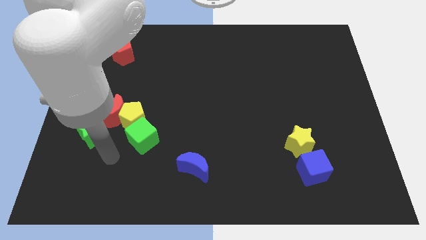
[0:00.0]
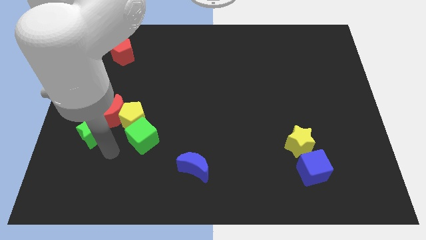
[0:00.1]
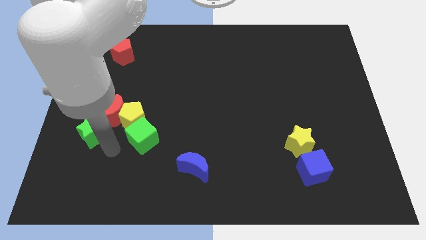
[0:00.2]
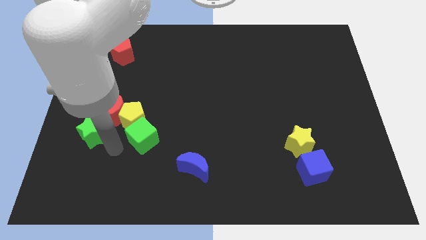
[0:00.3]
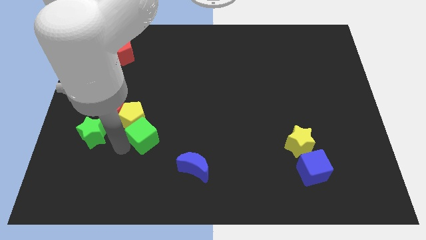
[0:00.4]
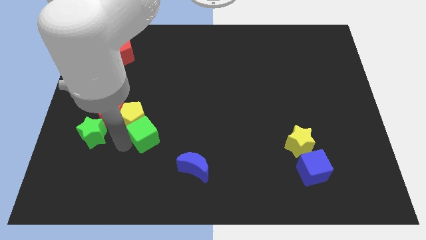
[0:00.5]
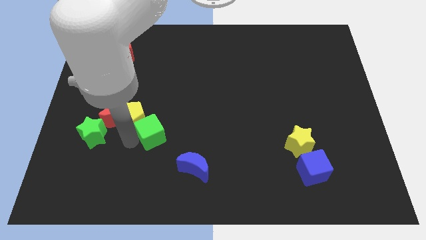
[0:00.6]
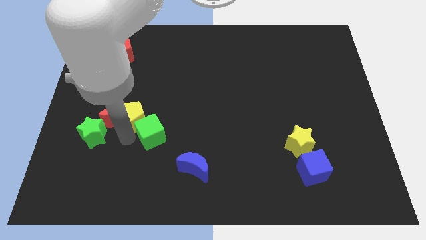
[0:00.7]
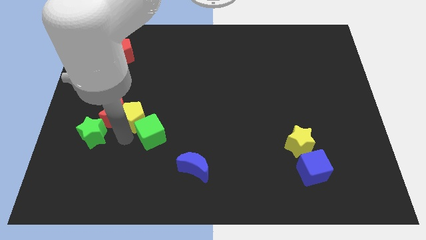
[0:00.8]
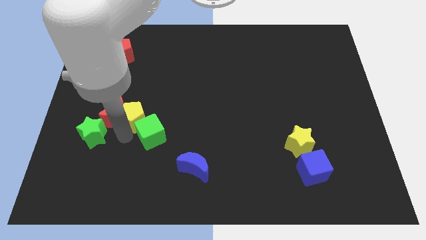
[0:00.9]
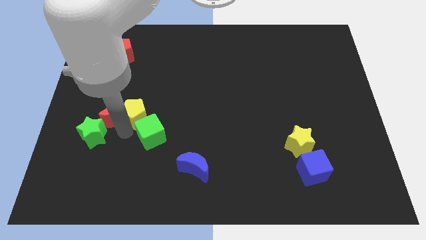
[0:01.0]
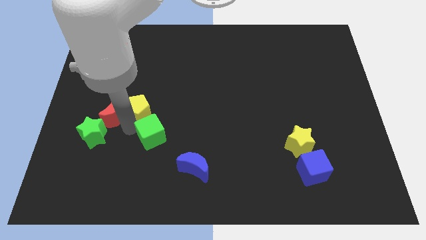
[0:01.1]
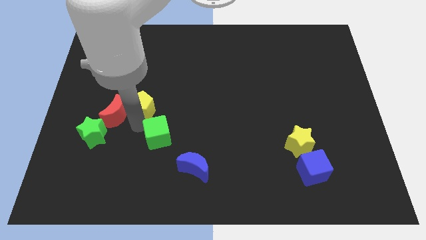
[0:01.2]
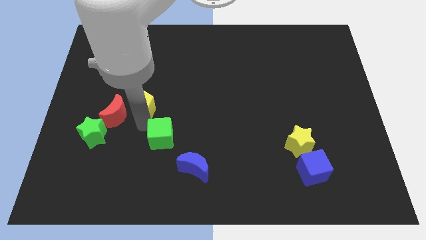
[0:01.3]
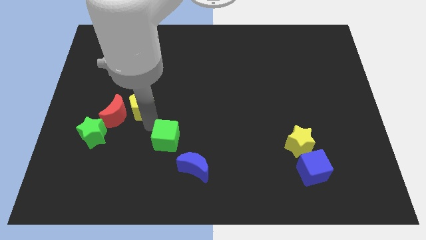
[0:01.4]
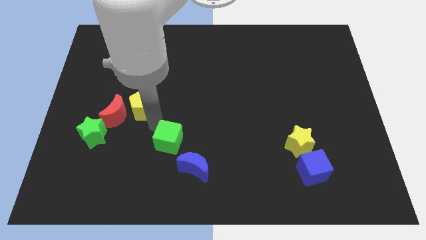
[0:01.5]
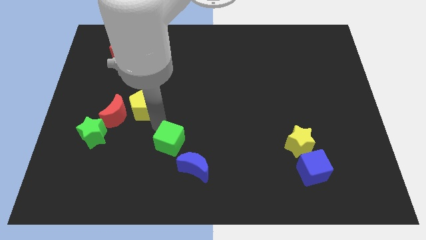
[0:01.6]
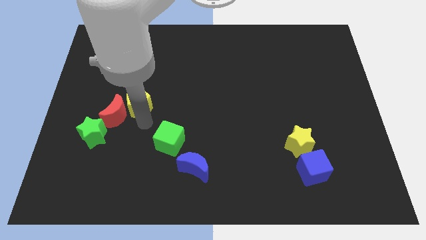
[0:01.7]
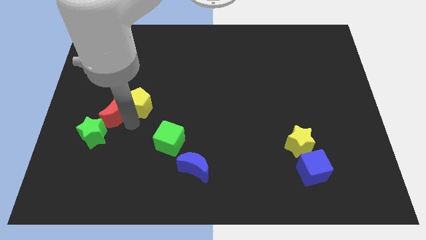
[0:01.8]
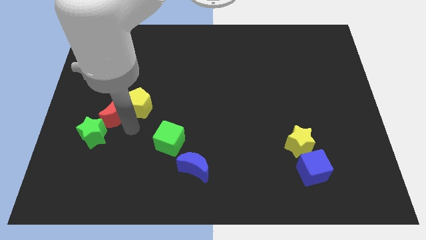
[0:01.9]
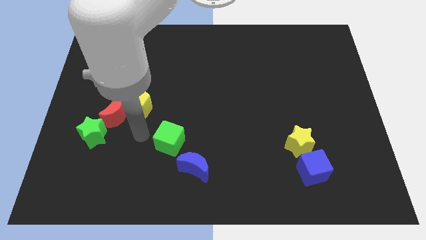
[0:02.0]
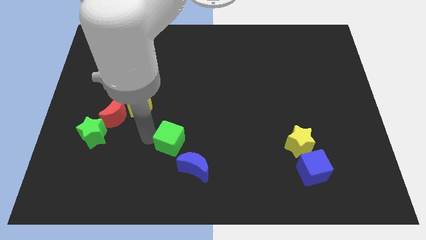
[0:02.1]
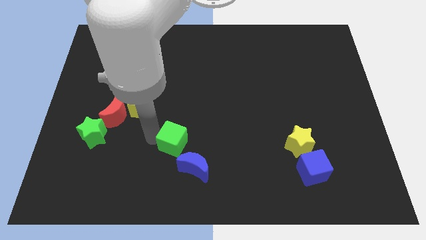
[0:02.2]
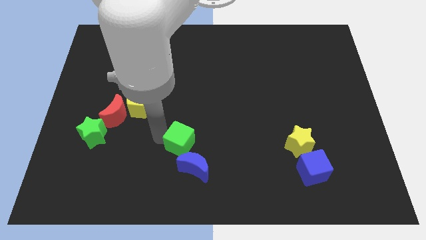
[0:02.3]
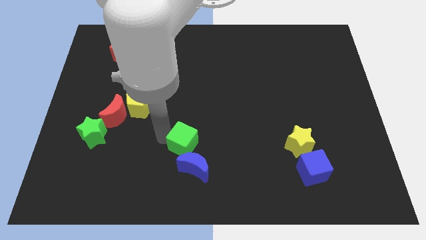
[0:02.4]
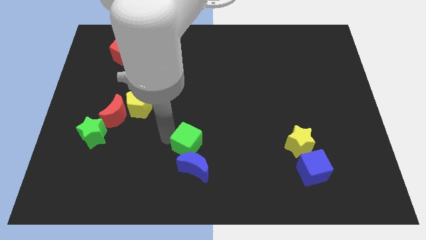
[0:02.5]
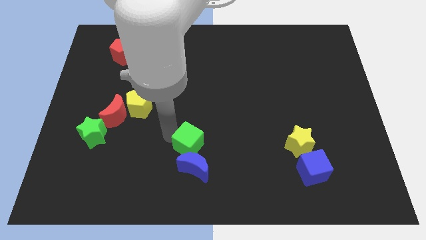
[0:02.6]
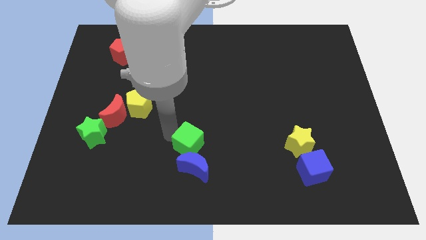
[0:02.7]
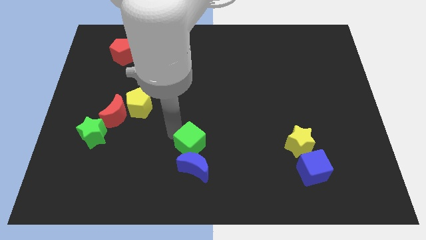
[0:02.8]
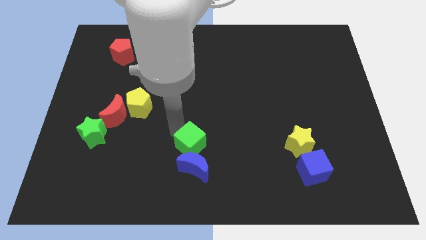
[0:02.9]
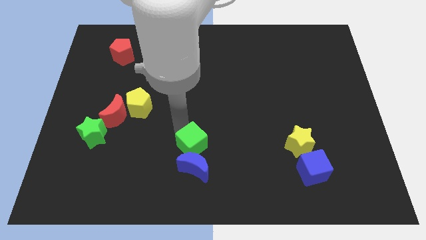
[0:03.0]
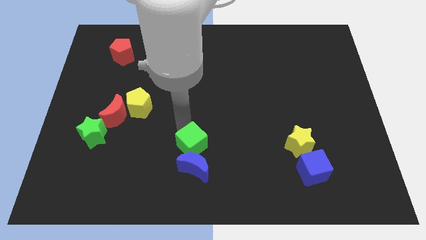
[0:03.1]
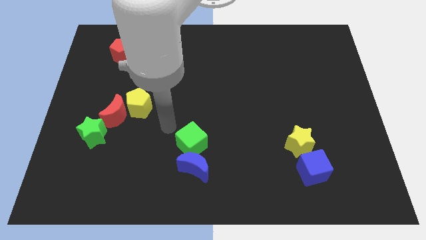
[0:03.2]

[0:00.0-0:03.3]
separate the green cube towards top of blue cube

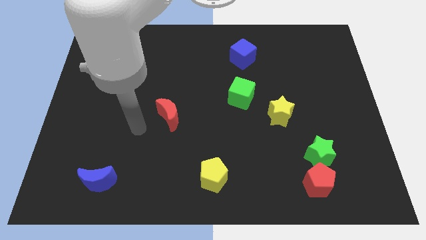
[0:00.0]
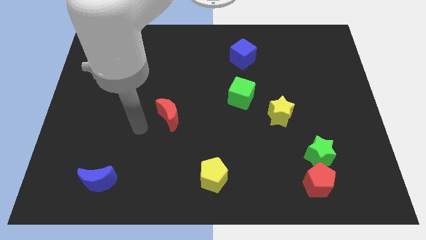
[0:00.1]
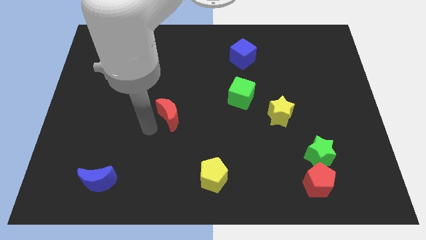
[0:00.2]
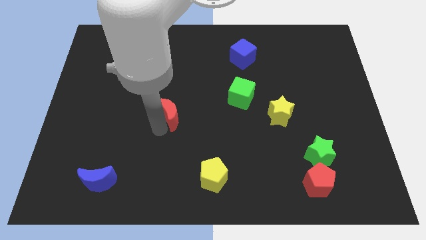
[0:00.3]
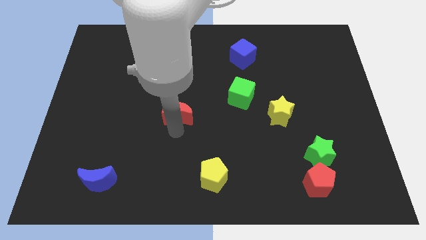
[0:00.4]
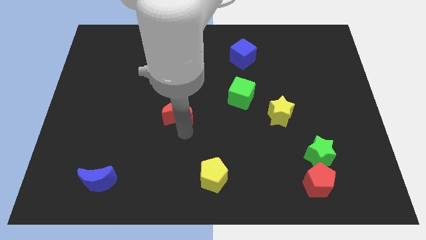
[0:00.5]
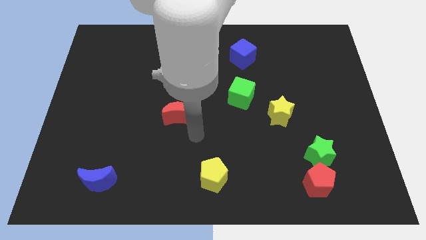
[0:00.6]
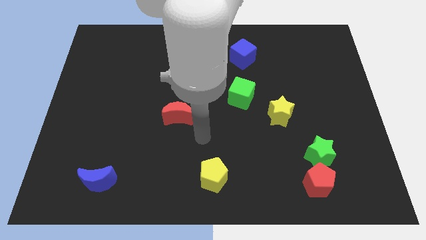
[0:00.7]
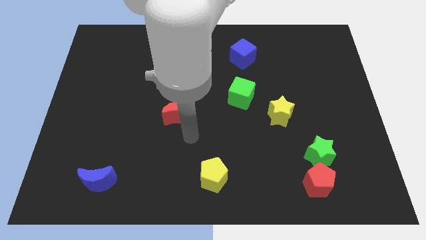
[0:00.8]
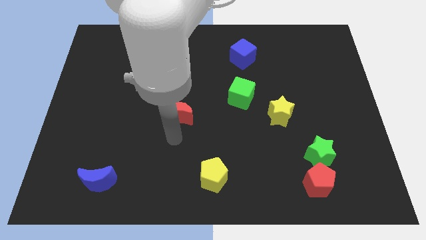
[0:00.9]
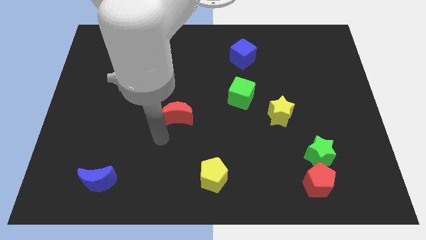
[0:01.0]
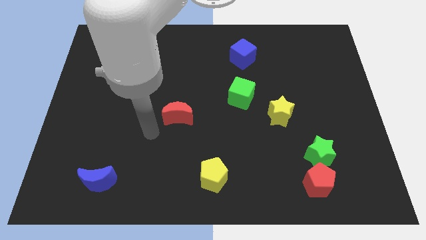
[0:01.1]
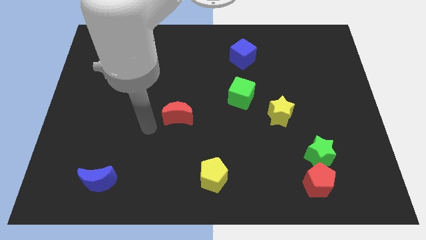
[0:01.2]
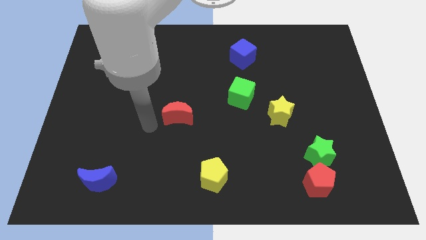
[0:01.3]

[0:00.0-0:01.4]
move the arm to the left side of the red moon

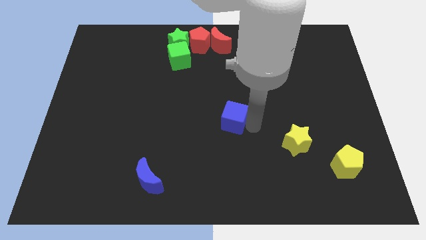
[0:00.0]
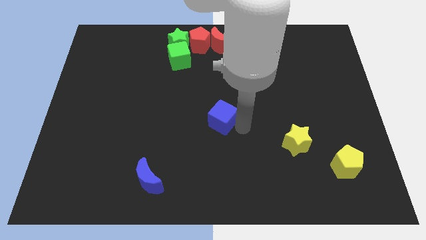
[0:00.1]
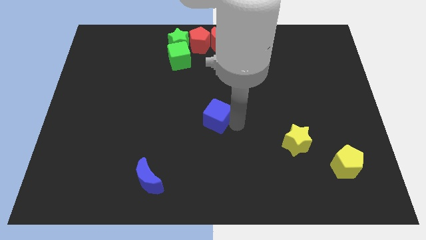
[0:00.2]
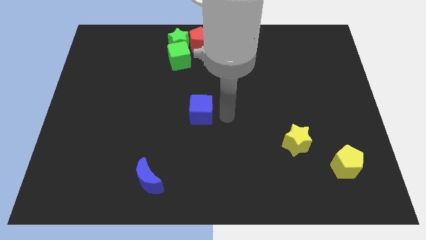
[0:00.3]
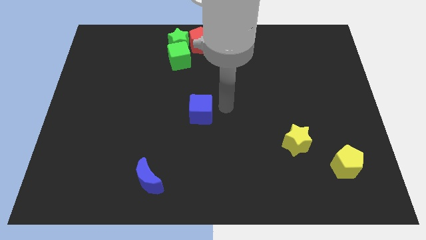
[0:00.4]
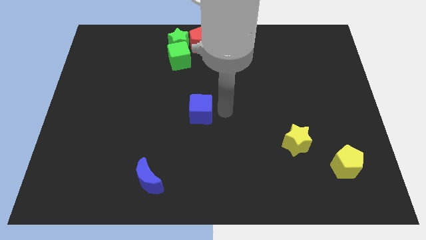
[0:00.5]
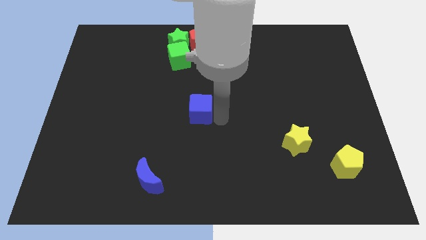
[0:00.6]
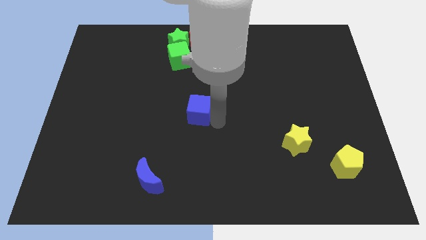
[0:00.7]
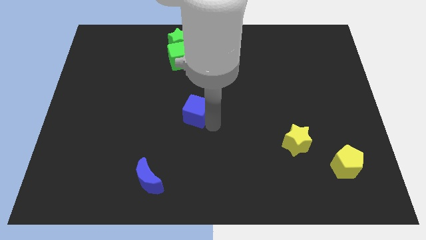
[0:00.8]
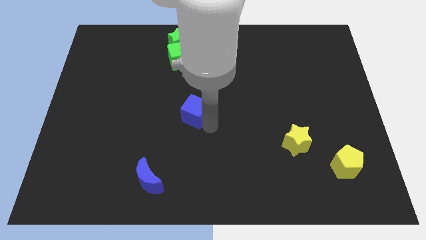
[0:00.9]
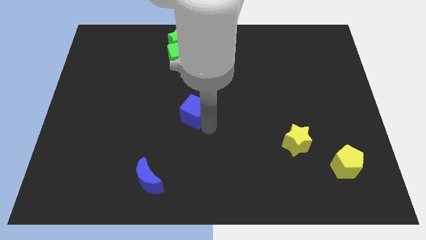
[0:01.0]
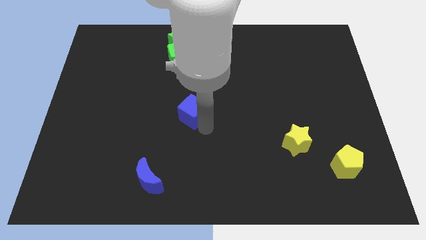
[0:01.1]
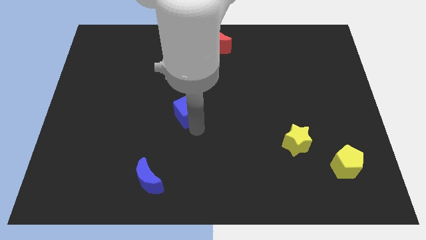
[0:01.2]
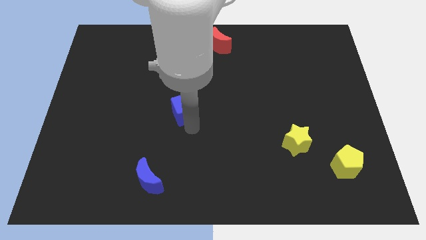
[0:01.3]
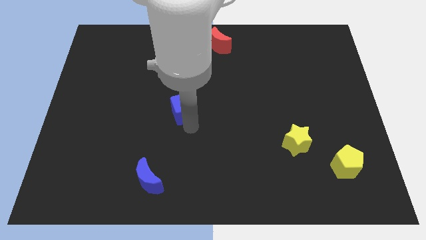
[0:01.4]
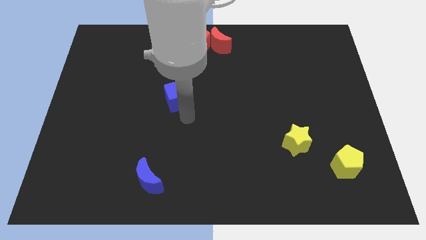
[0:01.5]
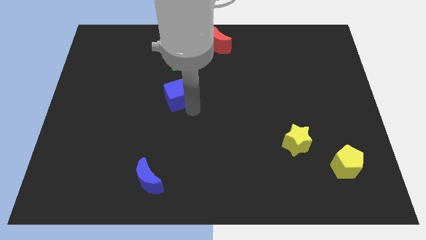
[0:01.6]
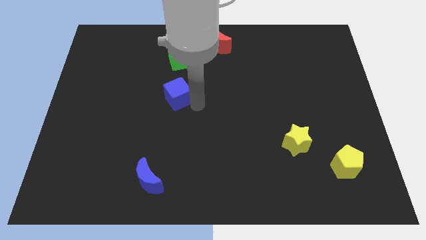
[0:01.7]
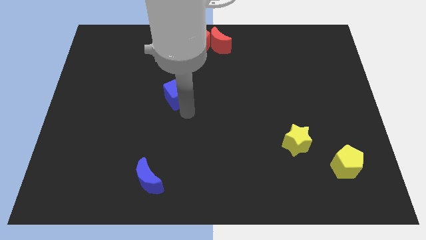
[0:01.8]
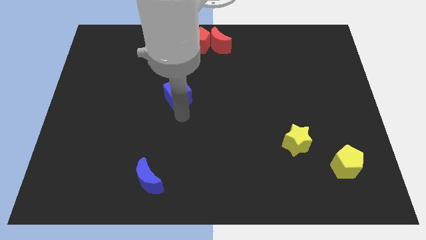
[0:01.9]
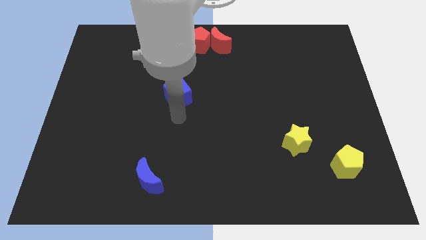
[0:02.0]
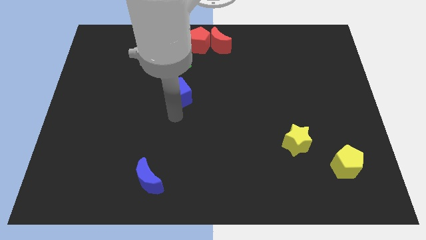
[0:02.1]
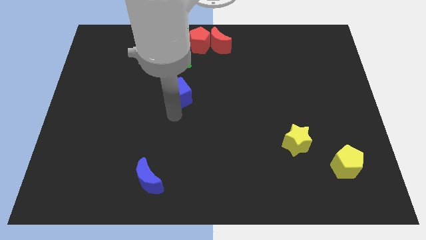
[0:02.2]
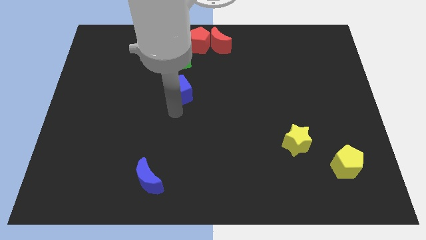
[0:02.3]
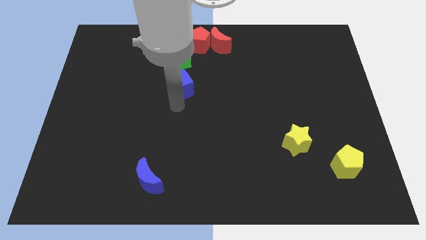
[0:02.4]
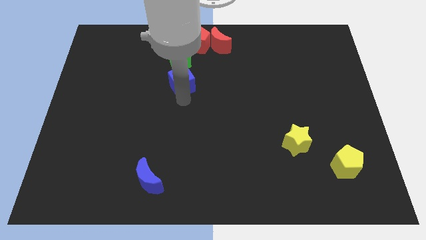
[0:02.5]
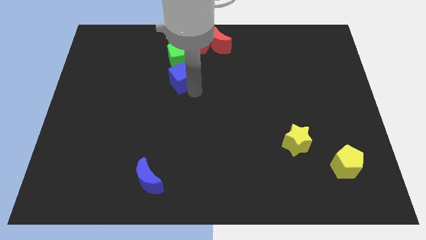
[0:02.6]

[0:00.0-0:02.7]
place the blue cube below the green cube

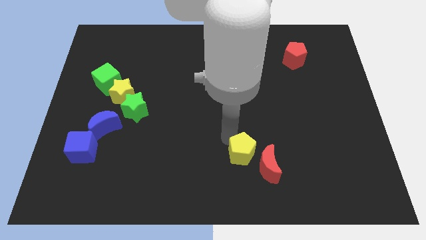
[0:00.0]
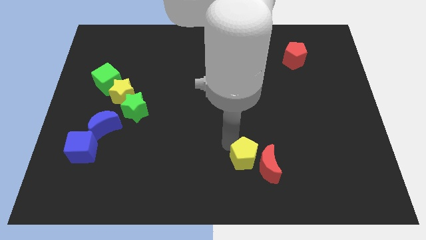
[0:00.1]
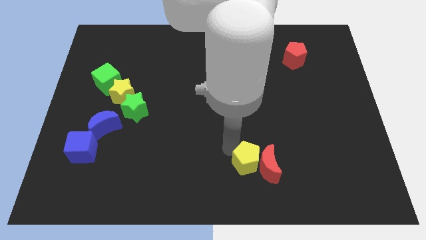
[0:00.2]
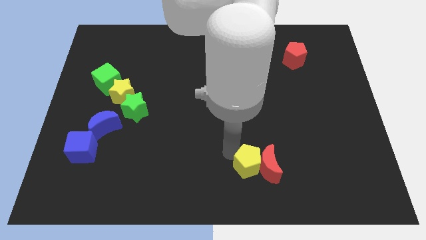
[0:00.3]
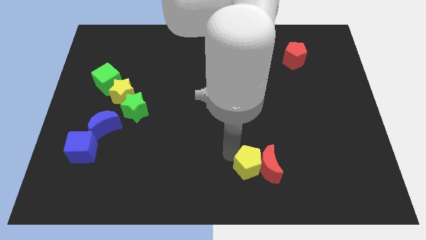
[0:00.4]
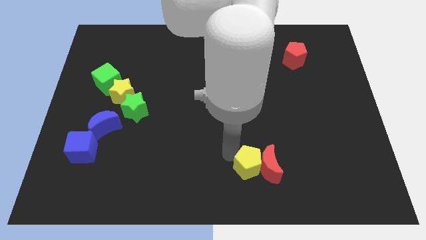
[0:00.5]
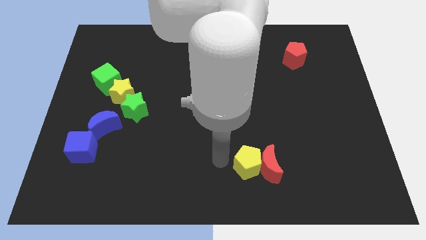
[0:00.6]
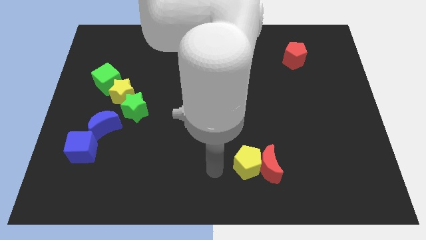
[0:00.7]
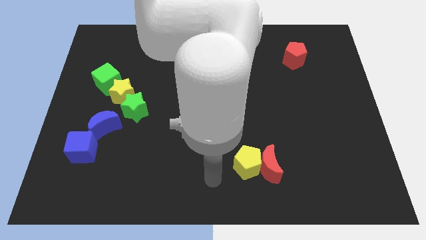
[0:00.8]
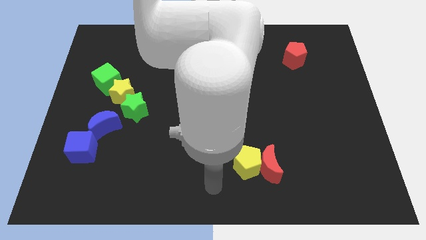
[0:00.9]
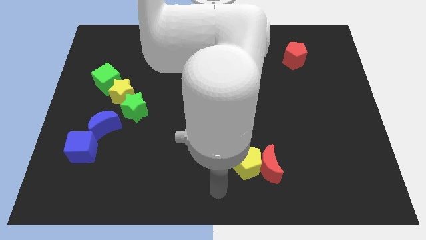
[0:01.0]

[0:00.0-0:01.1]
push yellow pentagon into red moon

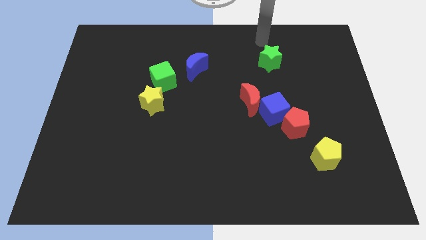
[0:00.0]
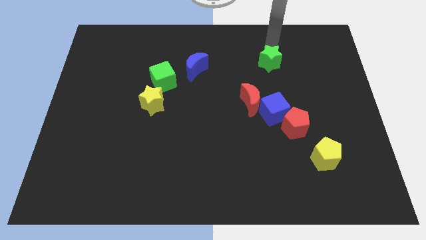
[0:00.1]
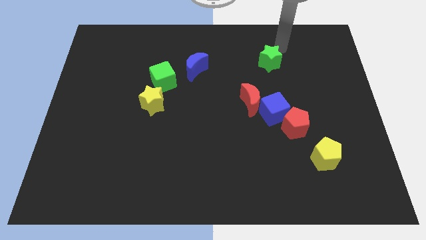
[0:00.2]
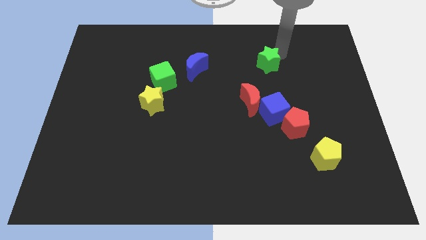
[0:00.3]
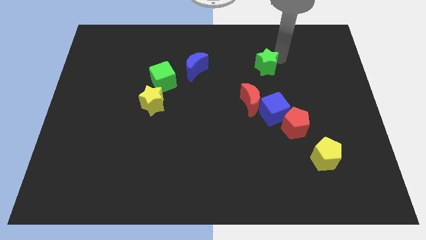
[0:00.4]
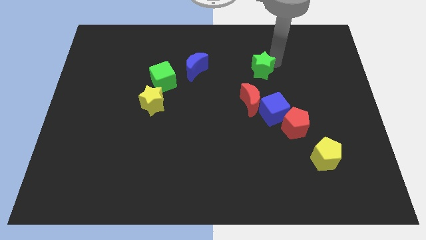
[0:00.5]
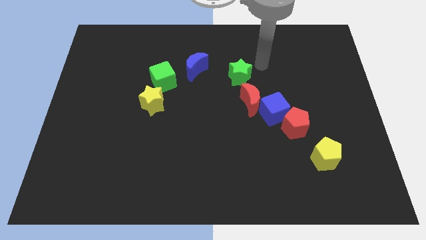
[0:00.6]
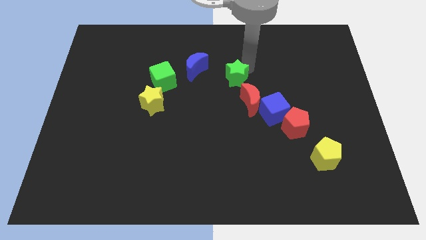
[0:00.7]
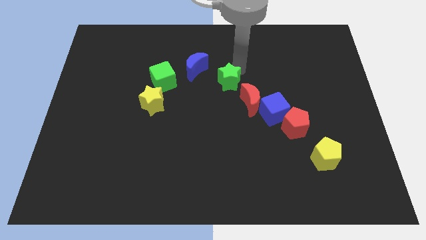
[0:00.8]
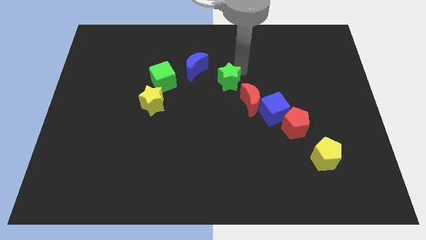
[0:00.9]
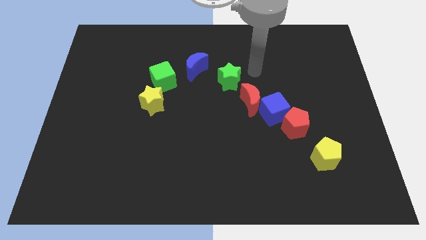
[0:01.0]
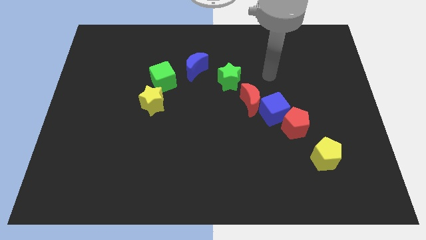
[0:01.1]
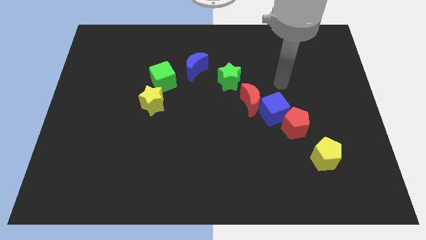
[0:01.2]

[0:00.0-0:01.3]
move the green star between the red crescent and blue crescent
